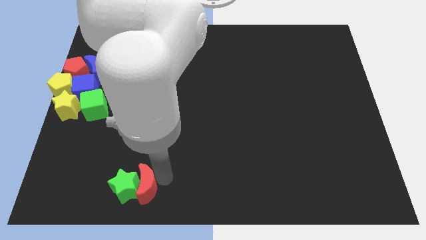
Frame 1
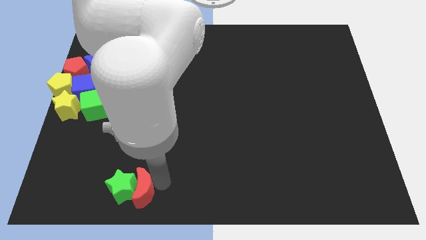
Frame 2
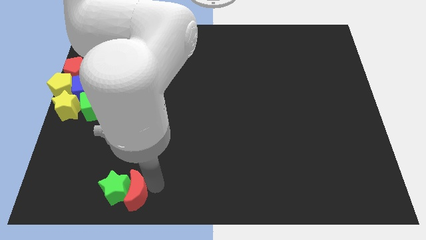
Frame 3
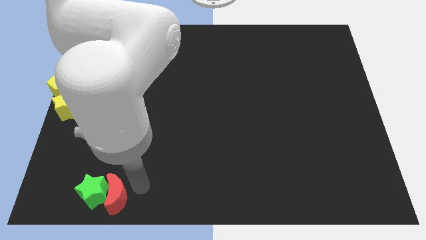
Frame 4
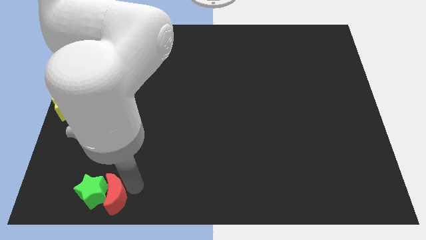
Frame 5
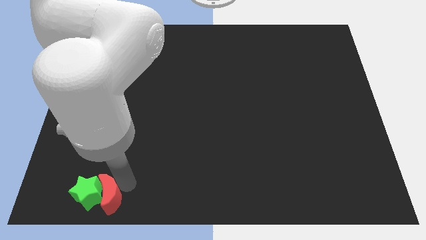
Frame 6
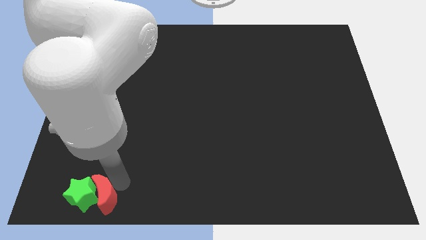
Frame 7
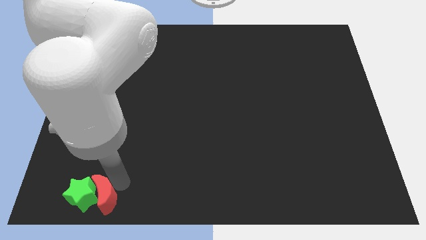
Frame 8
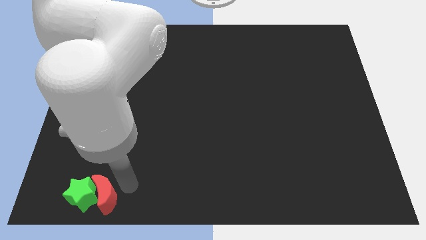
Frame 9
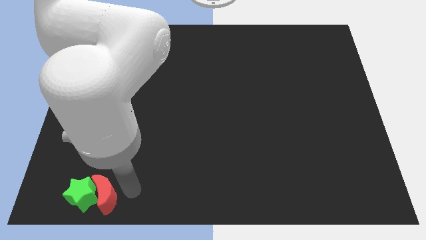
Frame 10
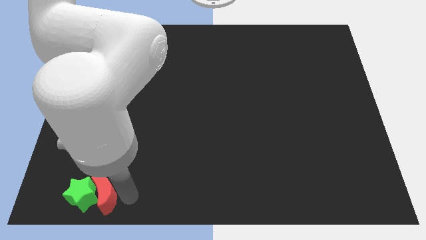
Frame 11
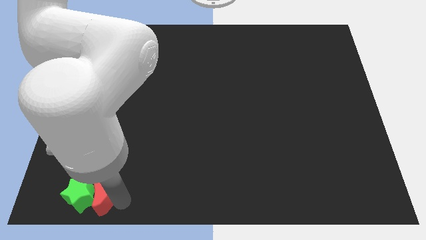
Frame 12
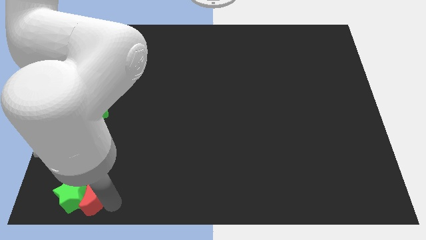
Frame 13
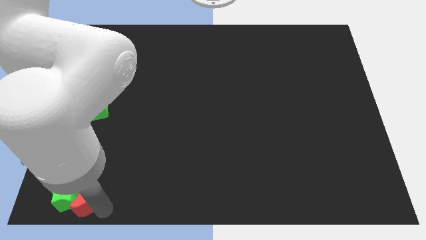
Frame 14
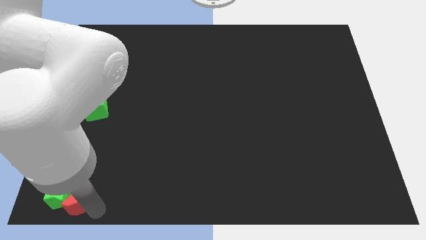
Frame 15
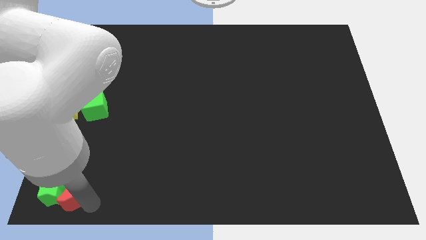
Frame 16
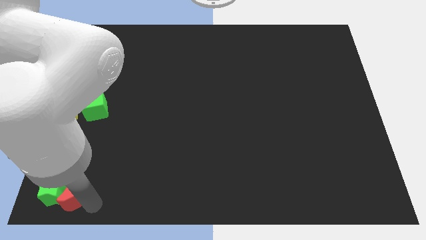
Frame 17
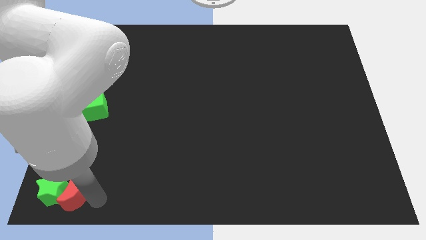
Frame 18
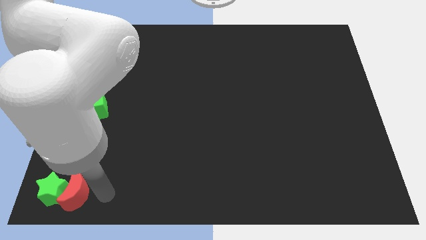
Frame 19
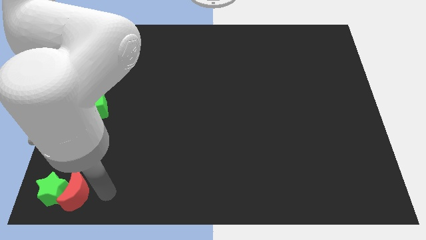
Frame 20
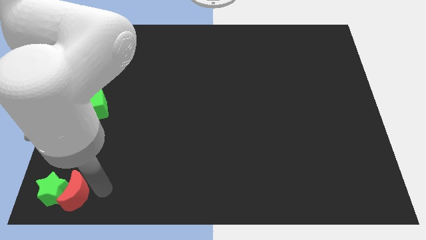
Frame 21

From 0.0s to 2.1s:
push the green star to the bottom left corner by pushing with red crescent

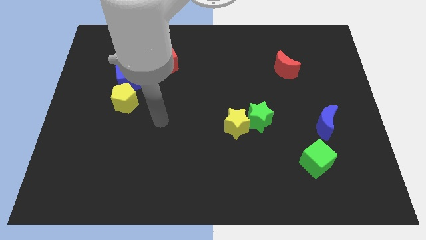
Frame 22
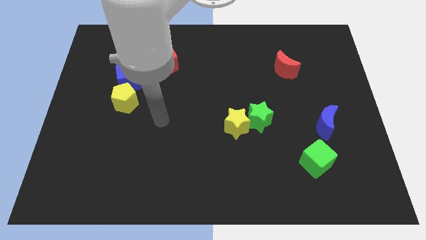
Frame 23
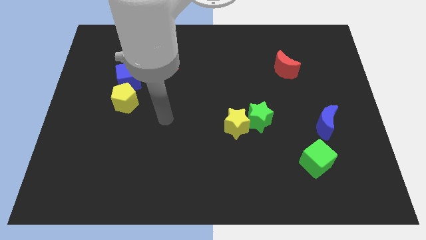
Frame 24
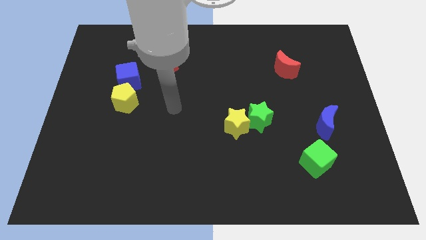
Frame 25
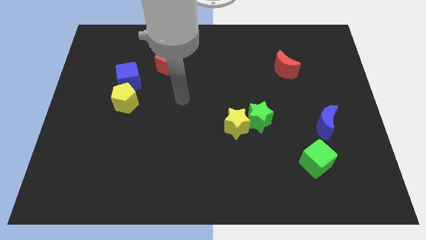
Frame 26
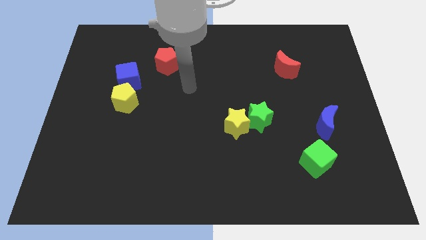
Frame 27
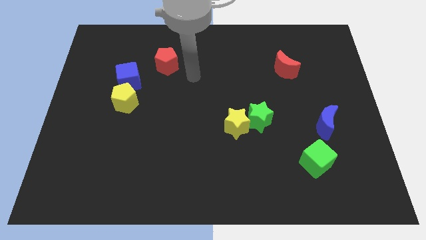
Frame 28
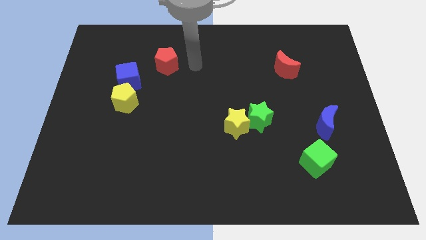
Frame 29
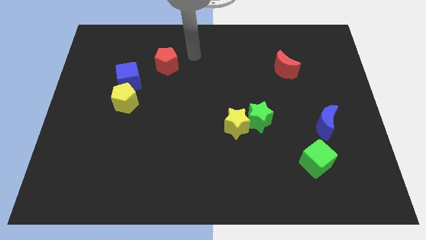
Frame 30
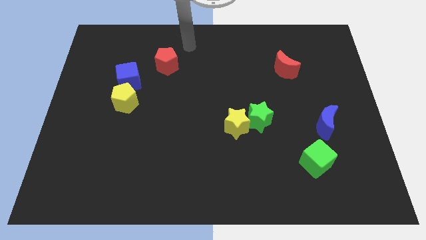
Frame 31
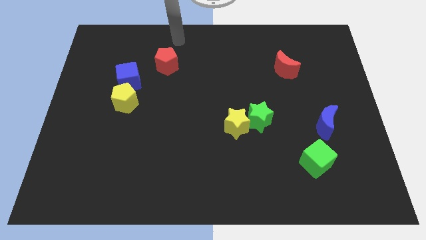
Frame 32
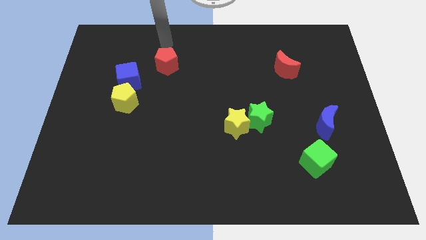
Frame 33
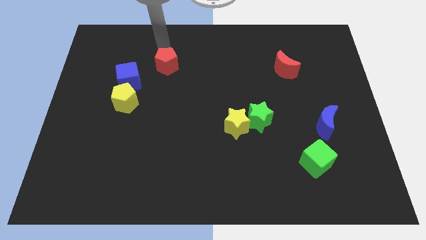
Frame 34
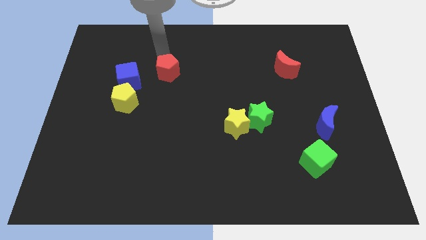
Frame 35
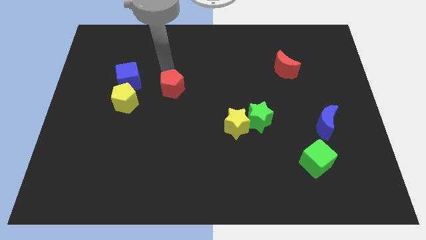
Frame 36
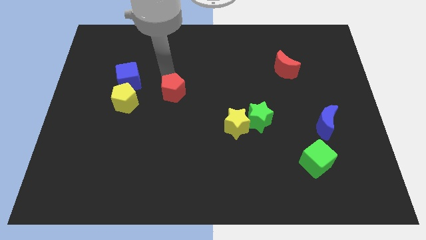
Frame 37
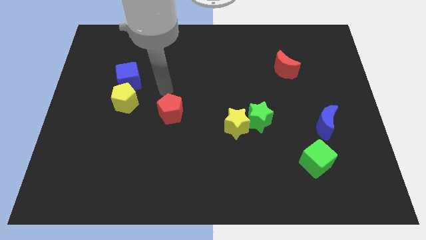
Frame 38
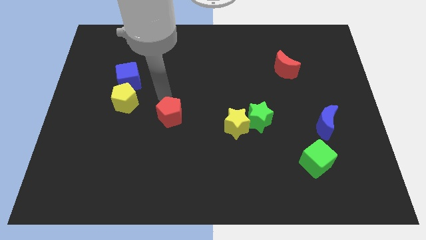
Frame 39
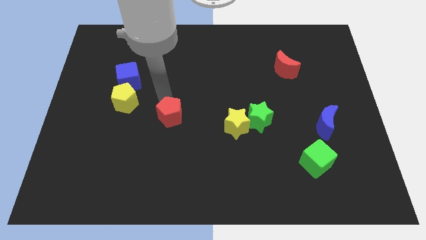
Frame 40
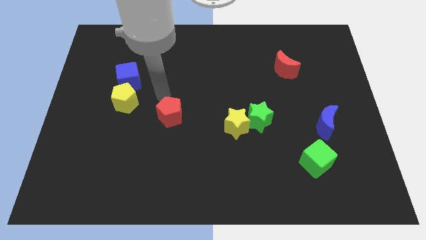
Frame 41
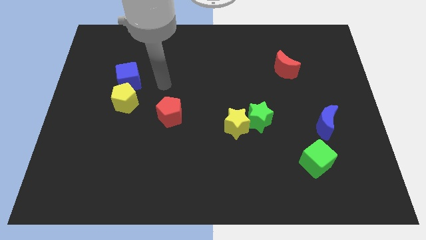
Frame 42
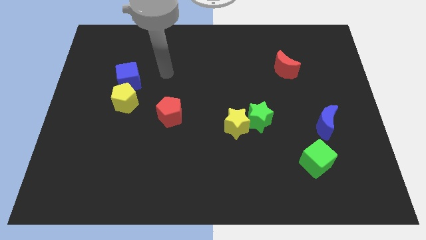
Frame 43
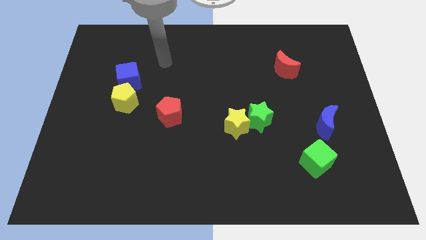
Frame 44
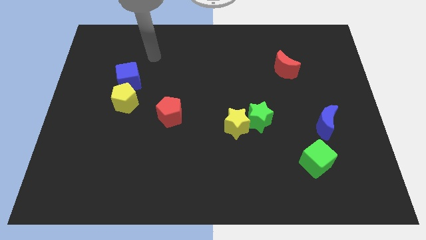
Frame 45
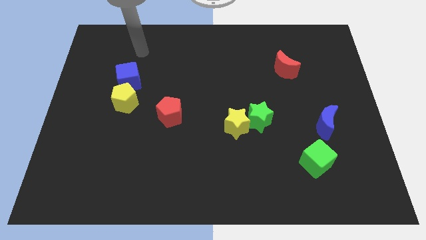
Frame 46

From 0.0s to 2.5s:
move the red pentagon to the center of the board

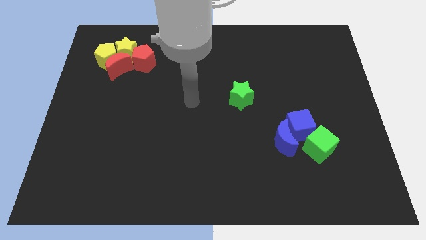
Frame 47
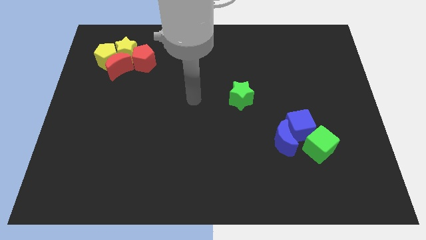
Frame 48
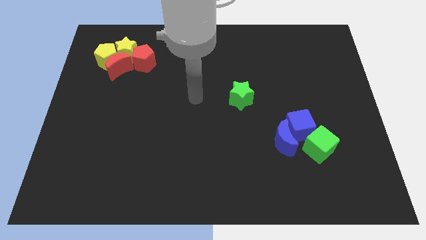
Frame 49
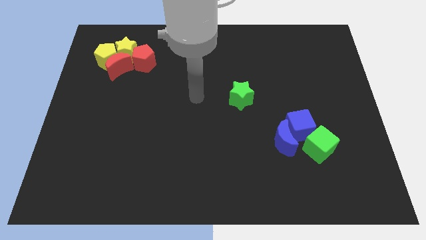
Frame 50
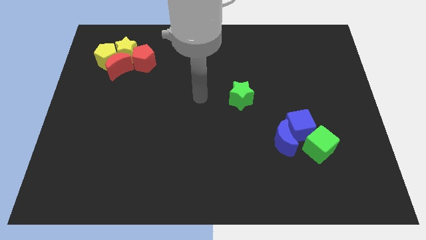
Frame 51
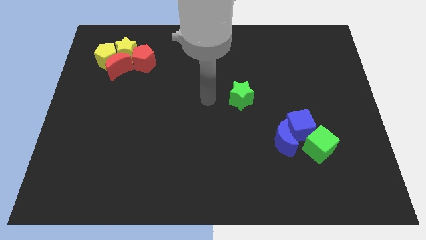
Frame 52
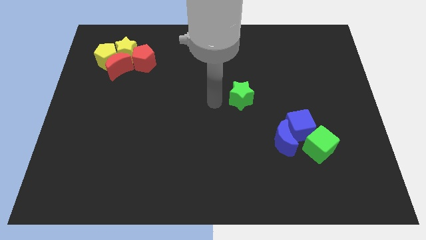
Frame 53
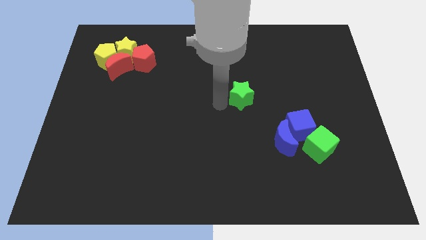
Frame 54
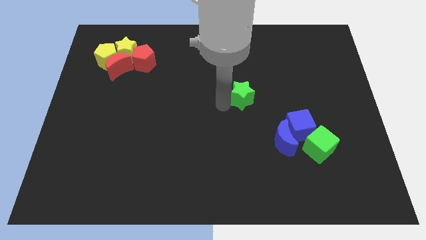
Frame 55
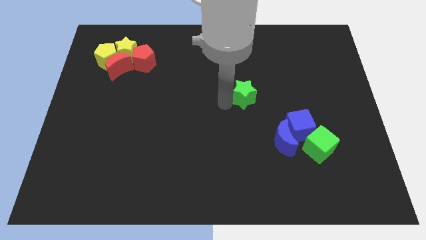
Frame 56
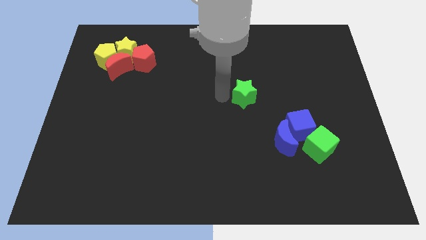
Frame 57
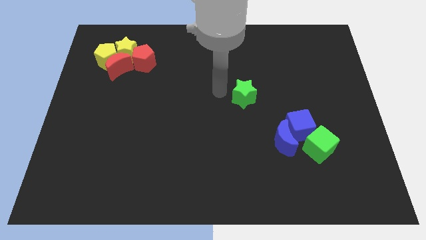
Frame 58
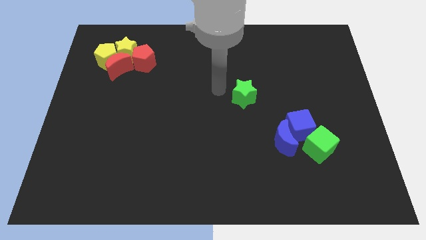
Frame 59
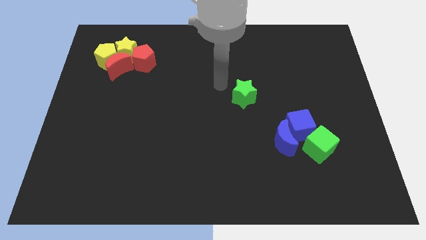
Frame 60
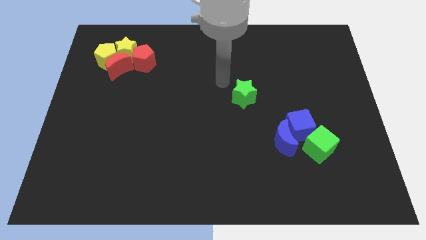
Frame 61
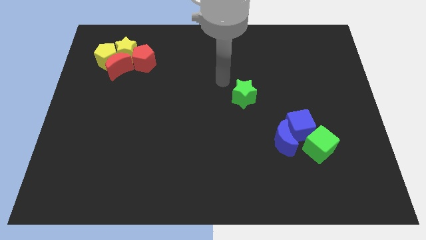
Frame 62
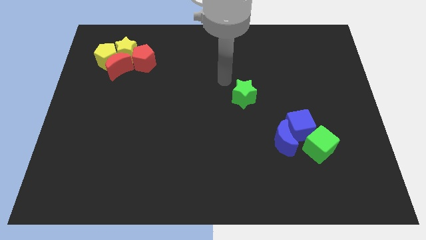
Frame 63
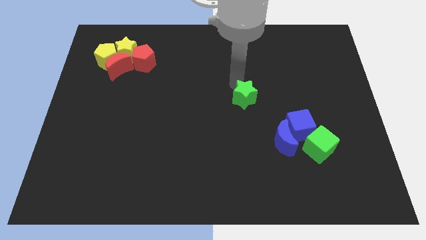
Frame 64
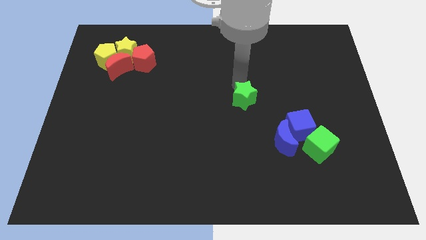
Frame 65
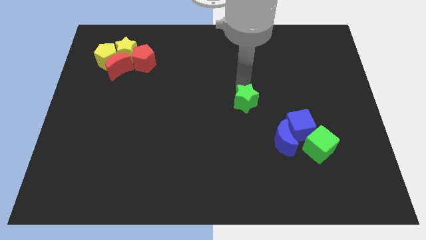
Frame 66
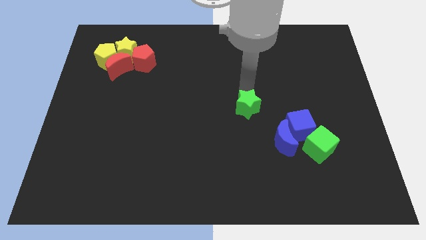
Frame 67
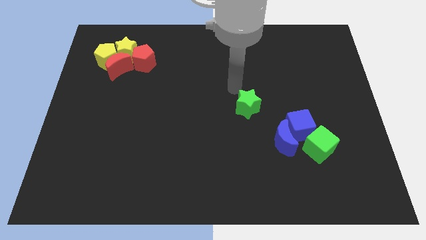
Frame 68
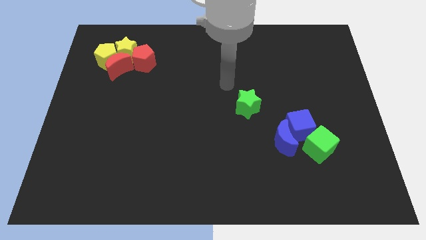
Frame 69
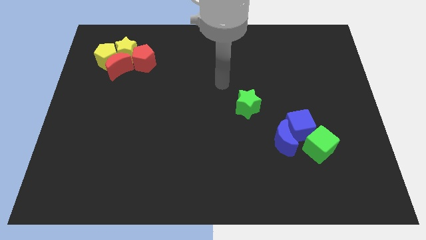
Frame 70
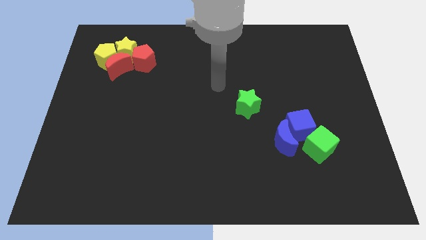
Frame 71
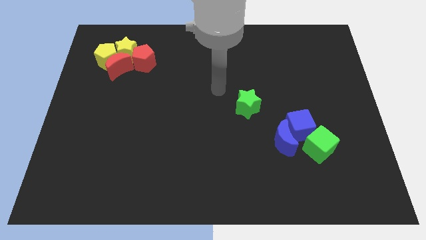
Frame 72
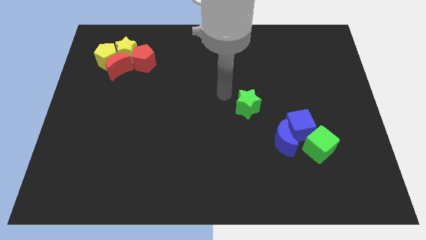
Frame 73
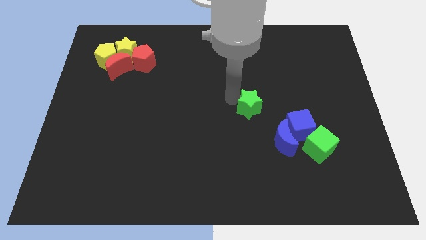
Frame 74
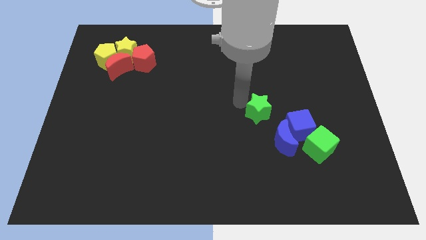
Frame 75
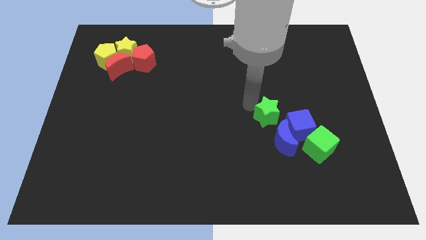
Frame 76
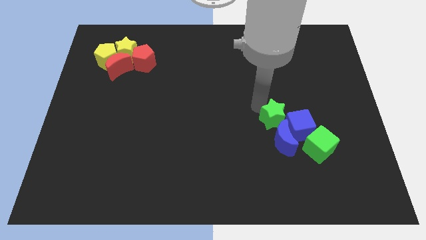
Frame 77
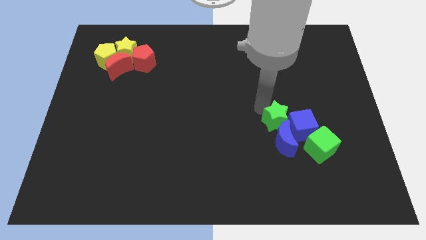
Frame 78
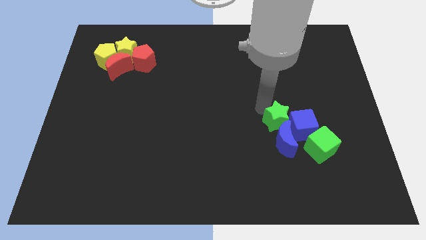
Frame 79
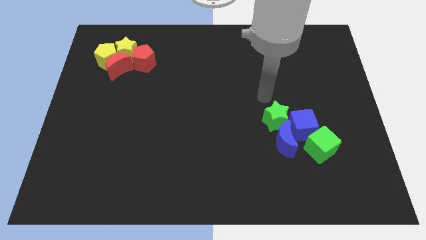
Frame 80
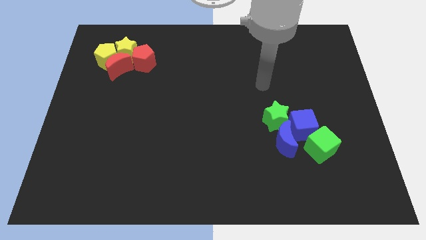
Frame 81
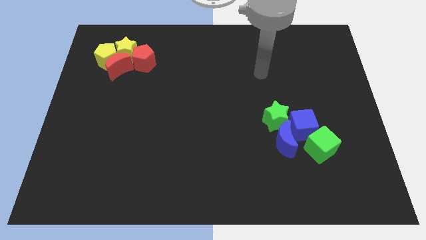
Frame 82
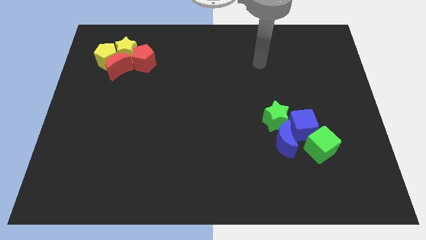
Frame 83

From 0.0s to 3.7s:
push green star into group of blocks

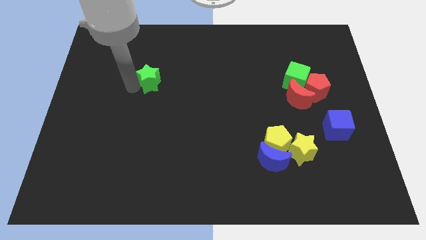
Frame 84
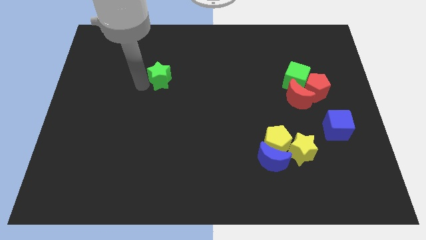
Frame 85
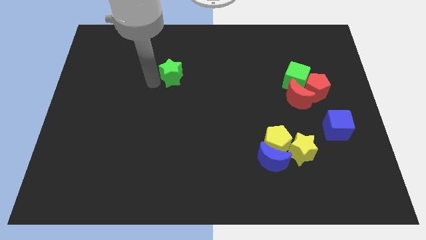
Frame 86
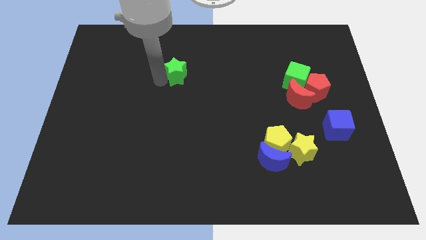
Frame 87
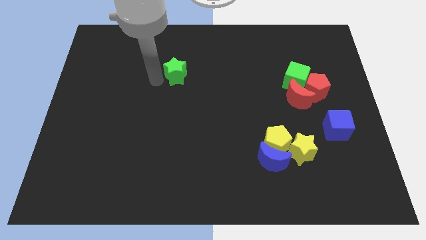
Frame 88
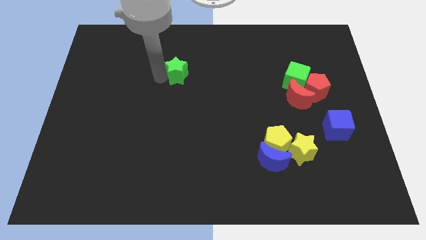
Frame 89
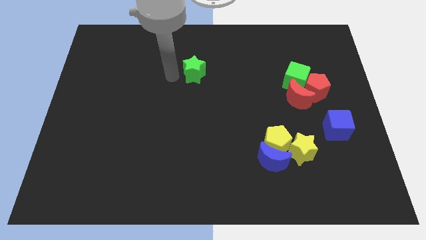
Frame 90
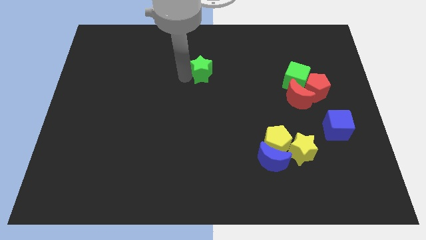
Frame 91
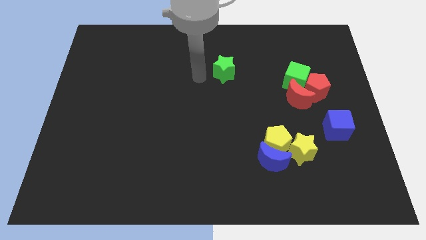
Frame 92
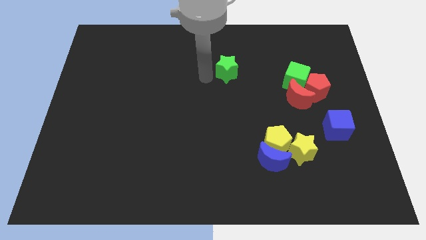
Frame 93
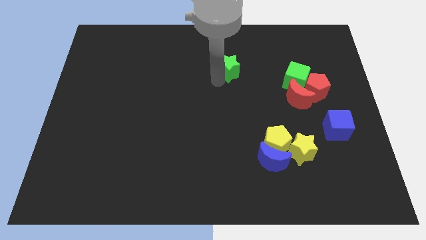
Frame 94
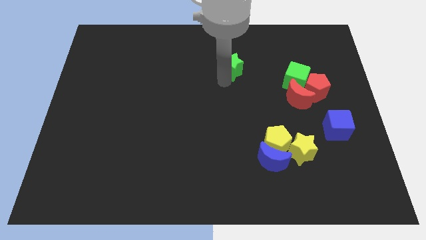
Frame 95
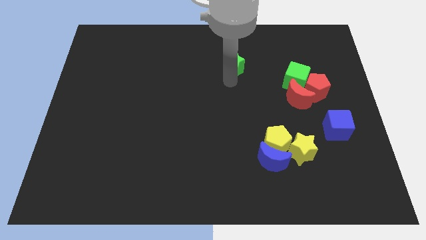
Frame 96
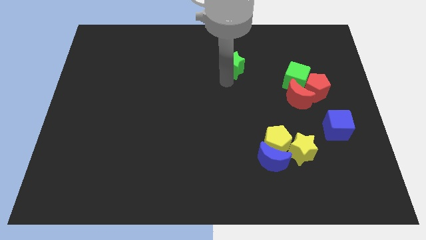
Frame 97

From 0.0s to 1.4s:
move the green star towards the right side of the board
